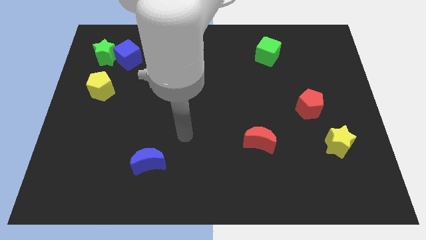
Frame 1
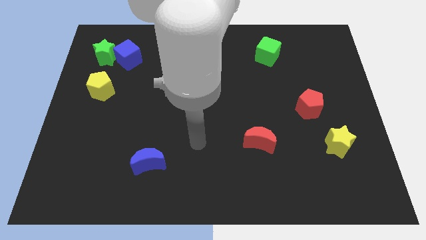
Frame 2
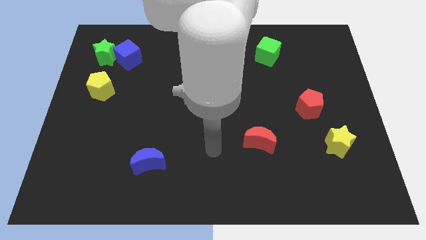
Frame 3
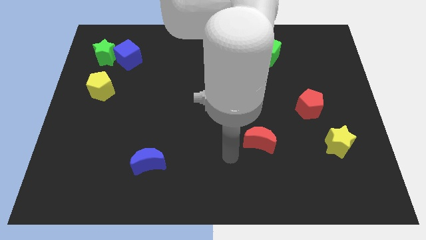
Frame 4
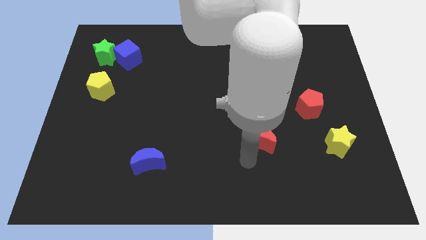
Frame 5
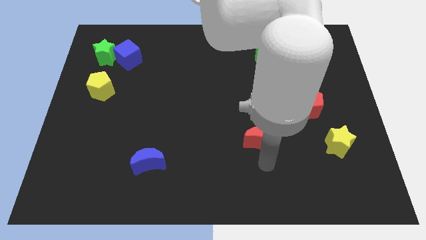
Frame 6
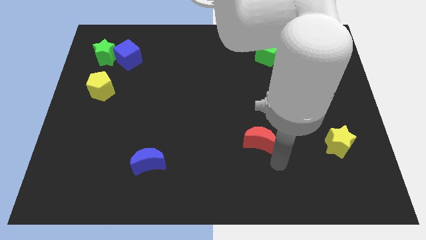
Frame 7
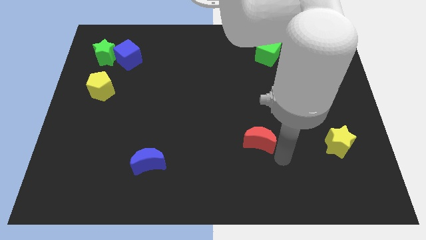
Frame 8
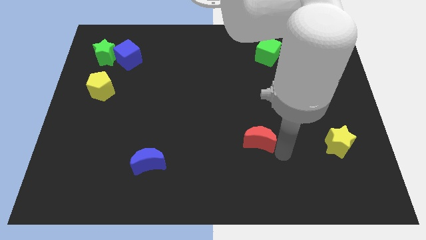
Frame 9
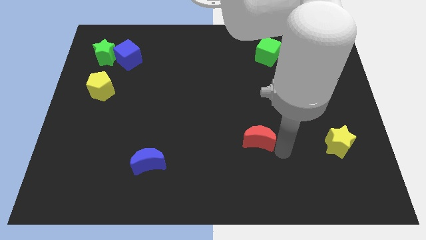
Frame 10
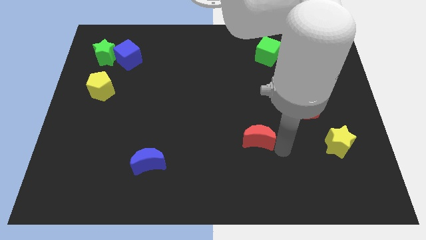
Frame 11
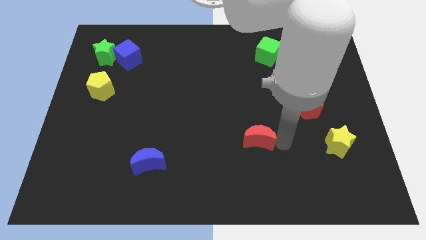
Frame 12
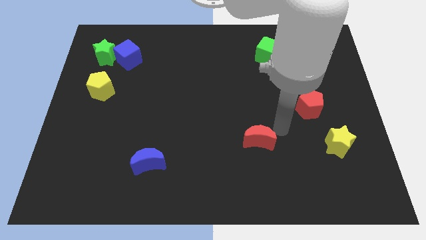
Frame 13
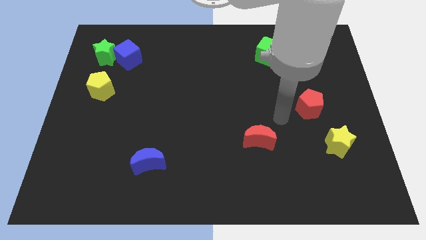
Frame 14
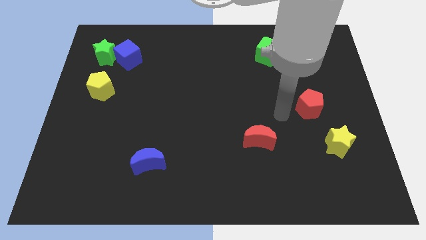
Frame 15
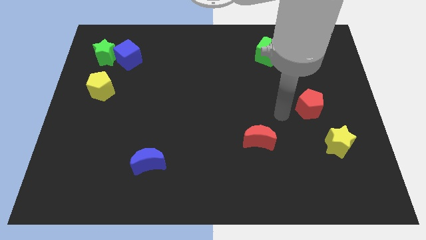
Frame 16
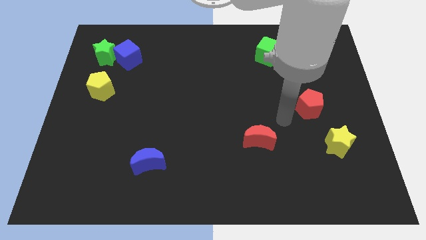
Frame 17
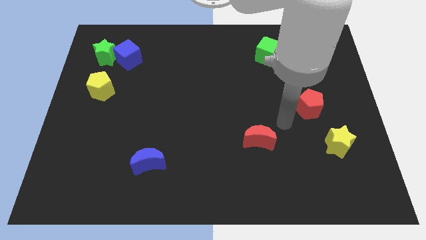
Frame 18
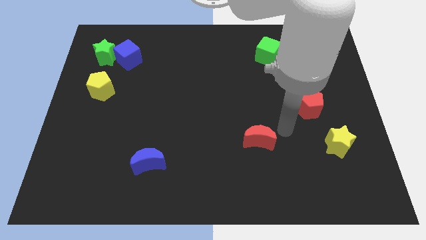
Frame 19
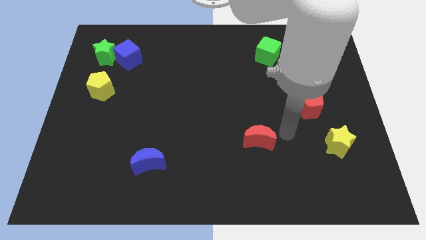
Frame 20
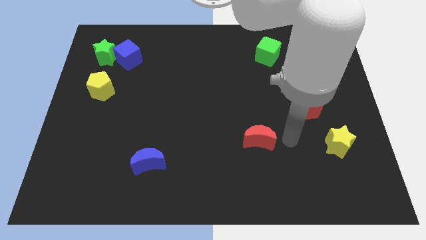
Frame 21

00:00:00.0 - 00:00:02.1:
move your arm to the right side of the red crescent

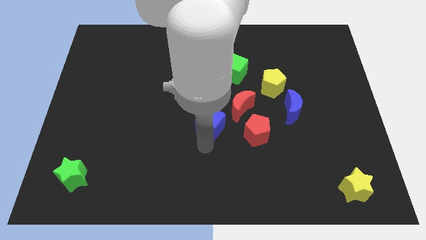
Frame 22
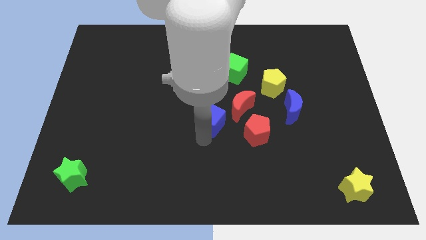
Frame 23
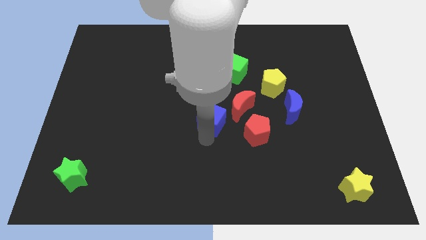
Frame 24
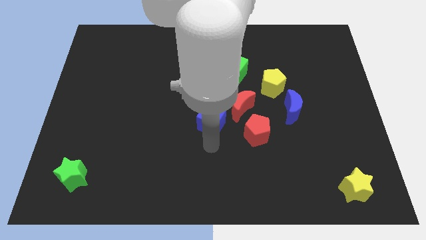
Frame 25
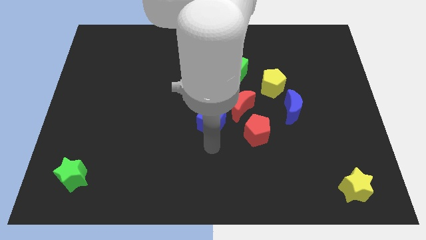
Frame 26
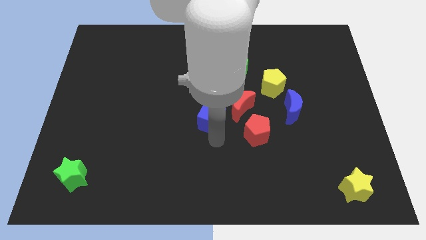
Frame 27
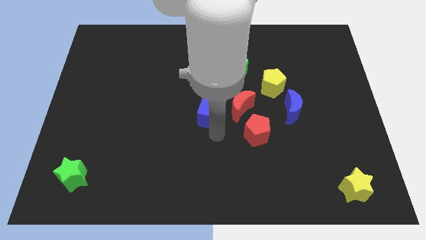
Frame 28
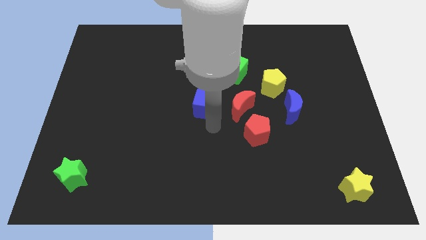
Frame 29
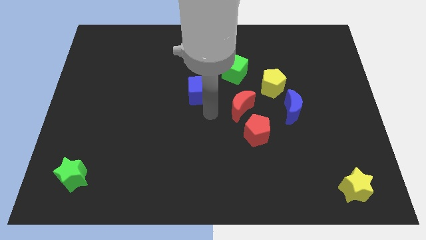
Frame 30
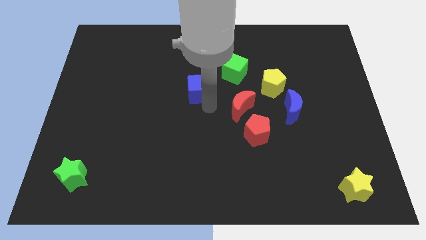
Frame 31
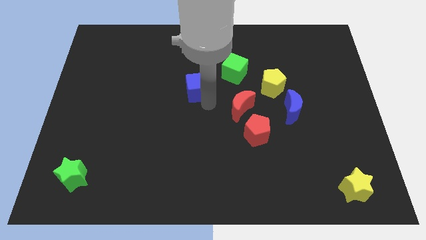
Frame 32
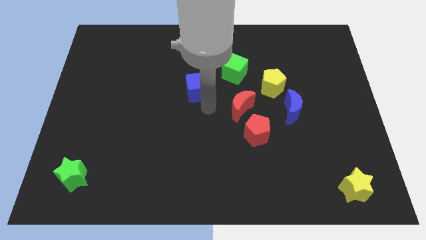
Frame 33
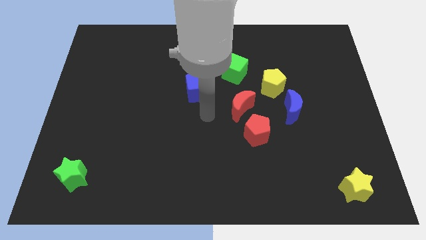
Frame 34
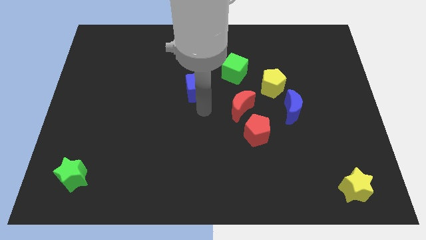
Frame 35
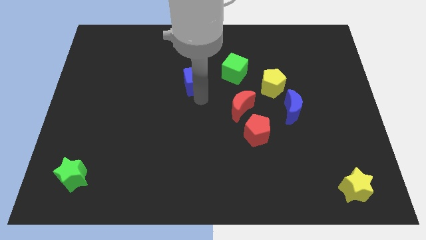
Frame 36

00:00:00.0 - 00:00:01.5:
push blue cube towards the left side of the board

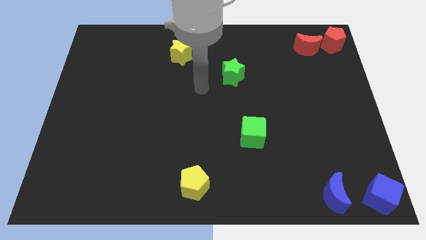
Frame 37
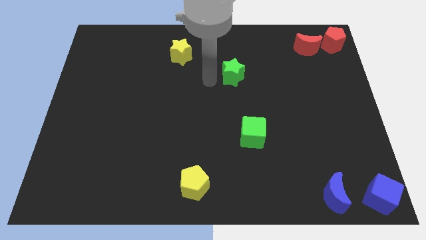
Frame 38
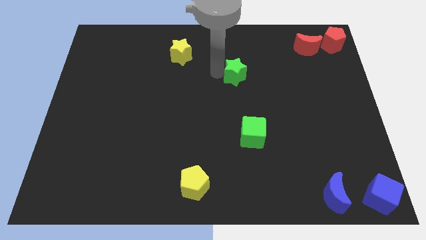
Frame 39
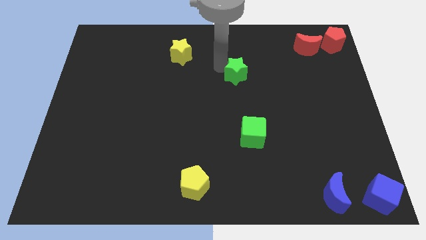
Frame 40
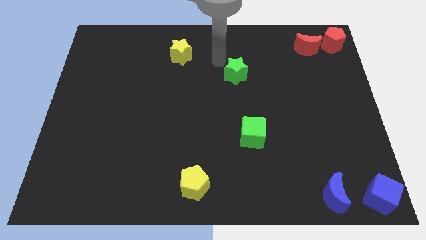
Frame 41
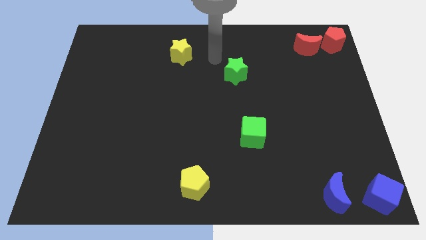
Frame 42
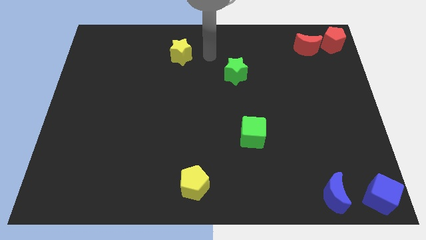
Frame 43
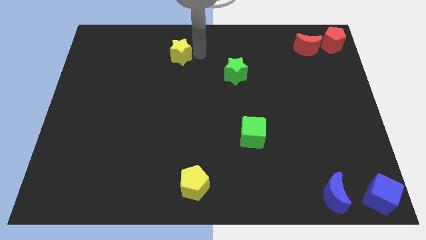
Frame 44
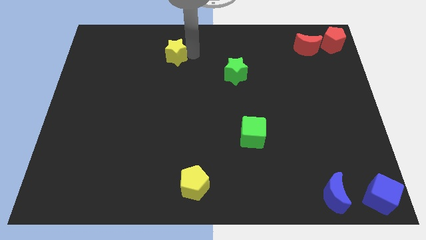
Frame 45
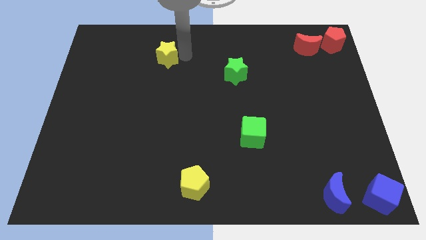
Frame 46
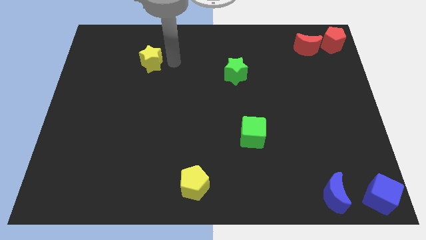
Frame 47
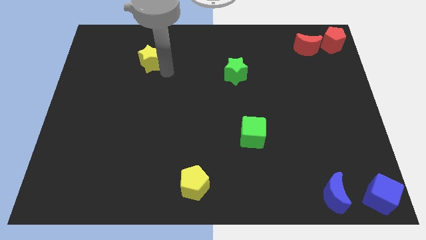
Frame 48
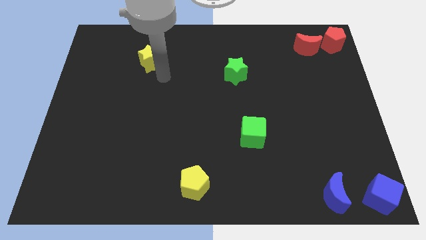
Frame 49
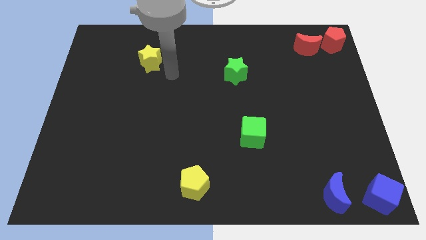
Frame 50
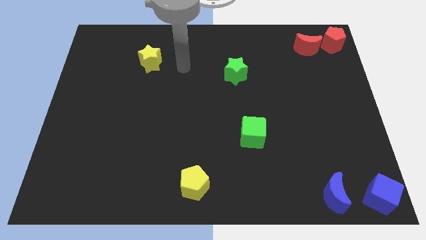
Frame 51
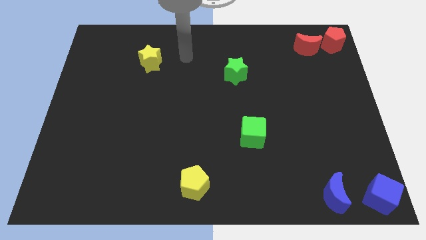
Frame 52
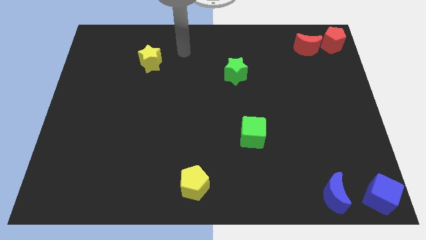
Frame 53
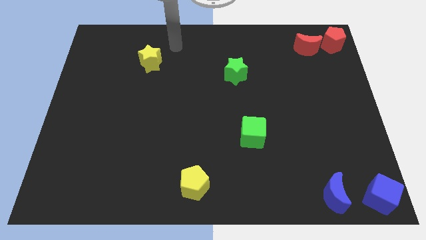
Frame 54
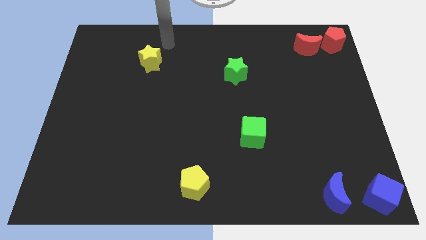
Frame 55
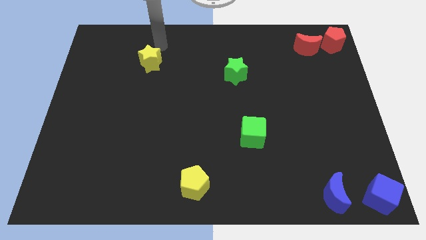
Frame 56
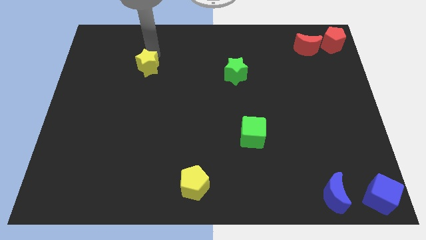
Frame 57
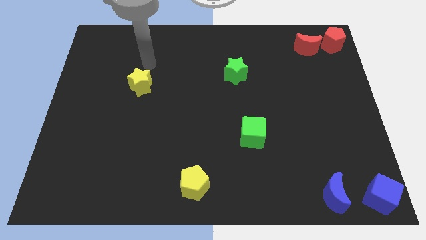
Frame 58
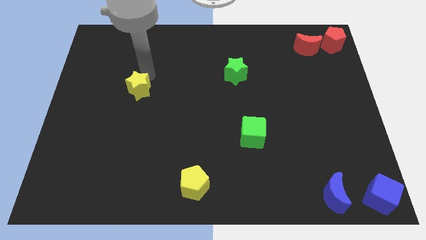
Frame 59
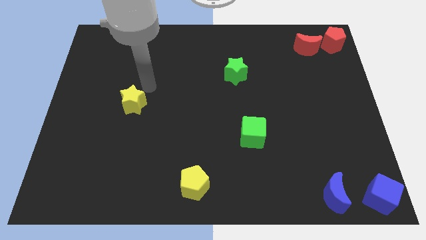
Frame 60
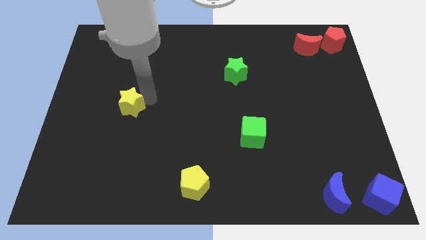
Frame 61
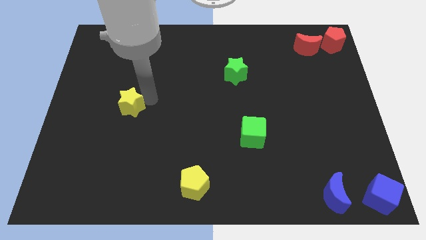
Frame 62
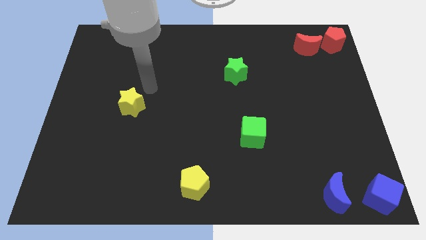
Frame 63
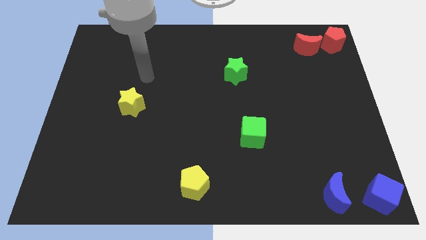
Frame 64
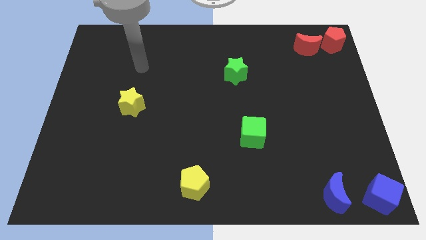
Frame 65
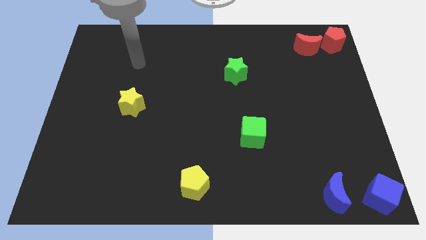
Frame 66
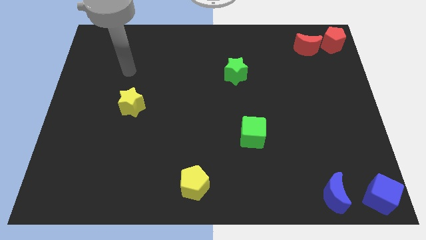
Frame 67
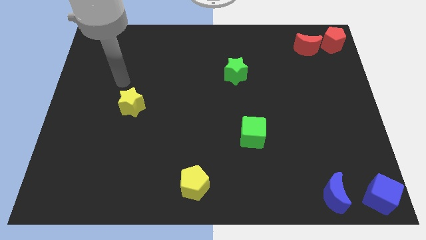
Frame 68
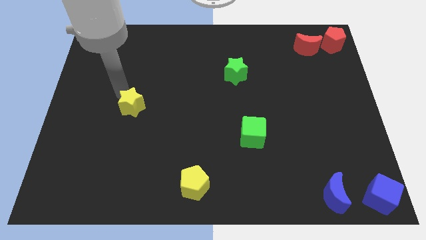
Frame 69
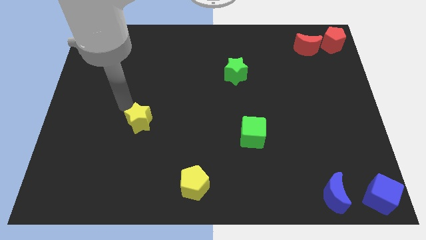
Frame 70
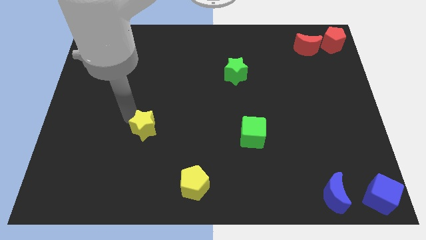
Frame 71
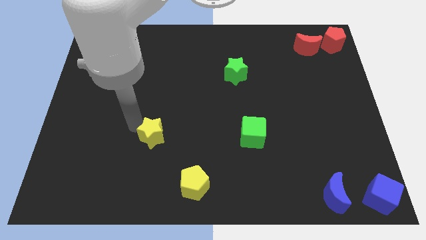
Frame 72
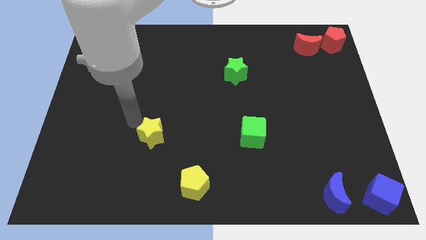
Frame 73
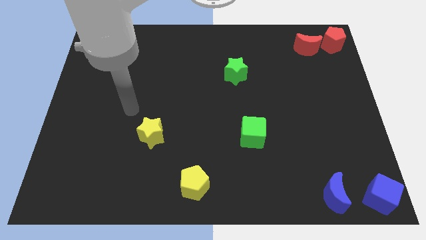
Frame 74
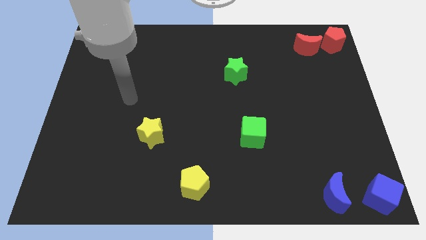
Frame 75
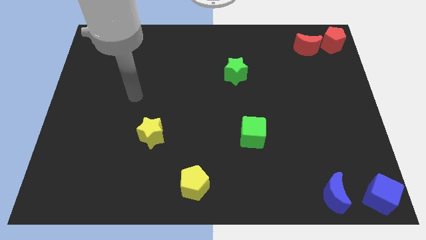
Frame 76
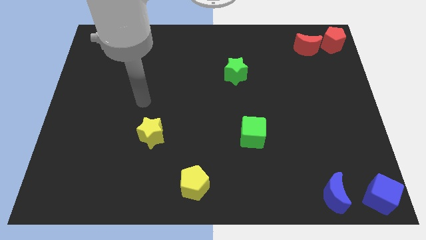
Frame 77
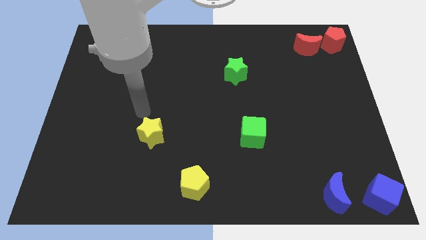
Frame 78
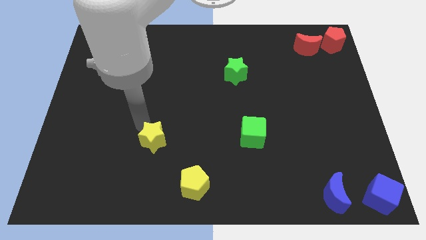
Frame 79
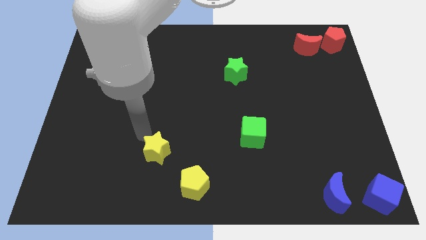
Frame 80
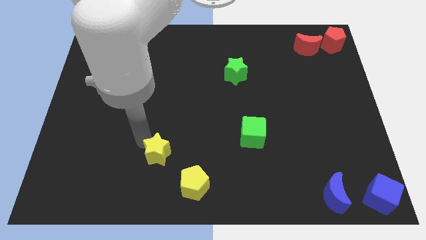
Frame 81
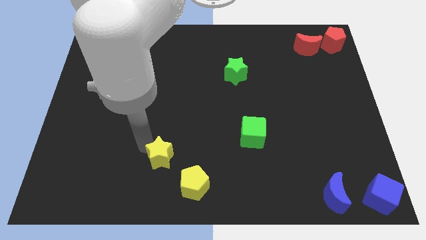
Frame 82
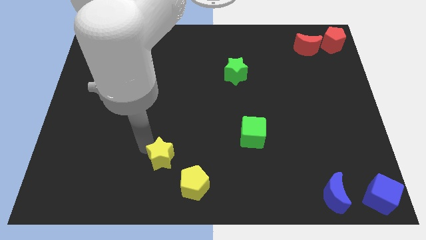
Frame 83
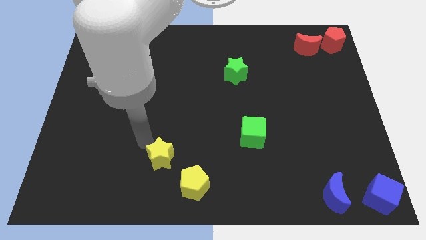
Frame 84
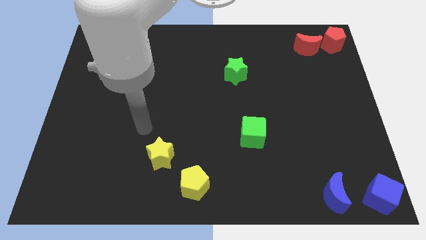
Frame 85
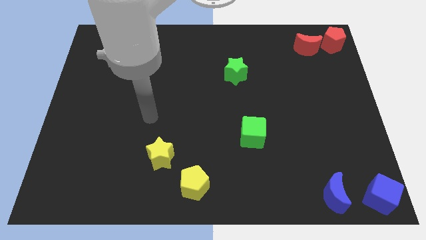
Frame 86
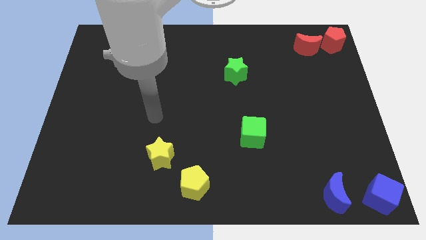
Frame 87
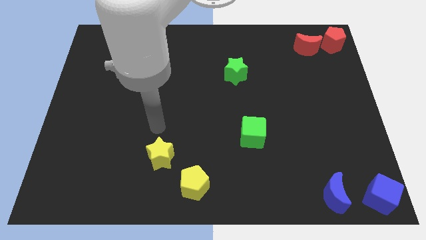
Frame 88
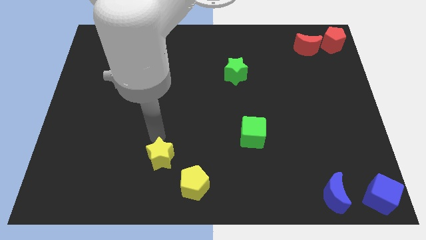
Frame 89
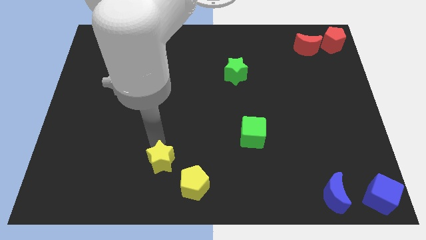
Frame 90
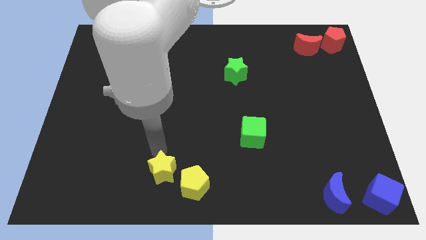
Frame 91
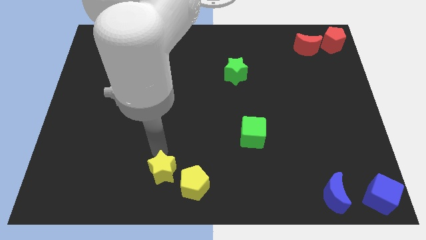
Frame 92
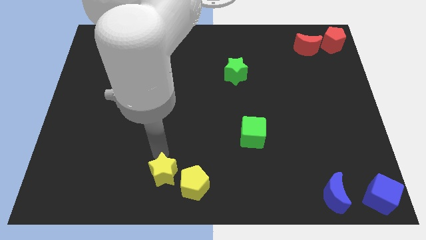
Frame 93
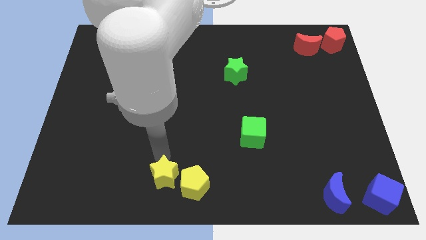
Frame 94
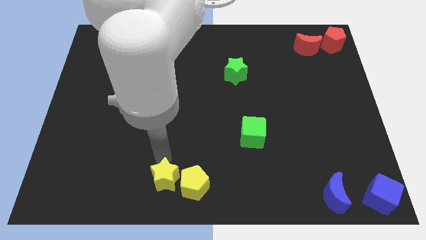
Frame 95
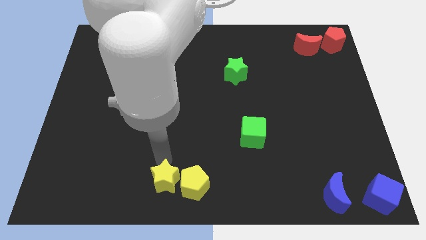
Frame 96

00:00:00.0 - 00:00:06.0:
push the yellow star close to yellow pentagon
